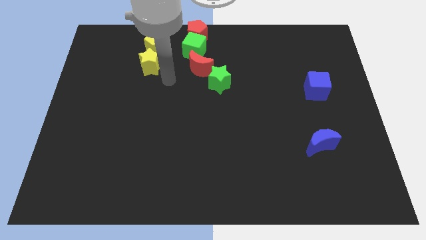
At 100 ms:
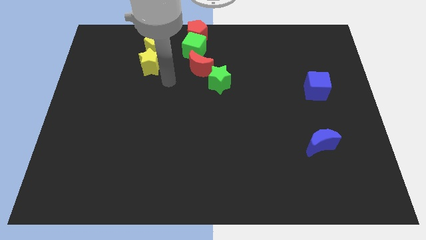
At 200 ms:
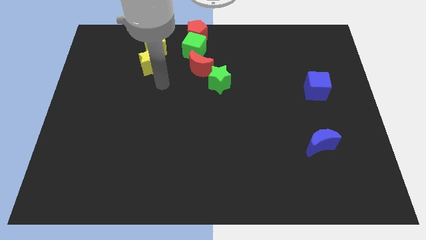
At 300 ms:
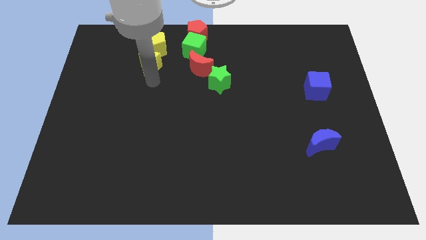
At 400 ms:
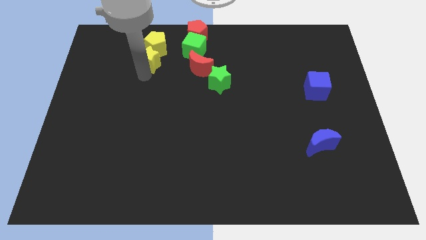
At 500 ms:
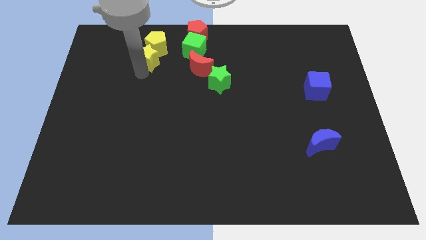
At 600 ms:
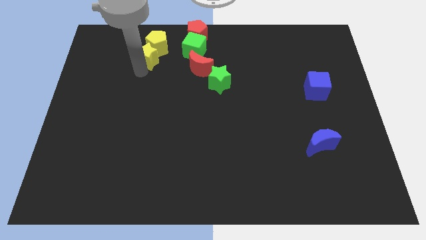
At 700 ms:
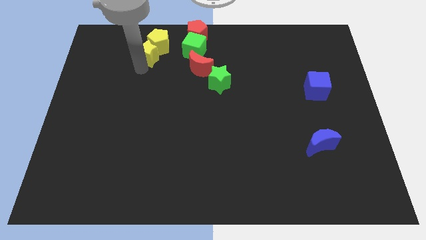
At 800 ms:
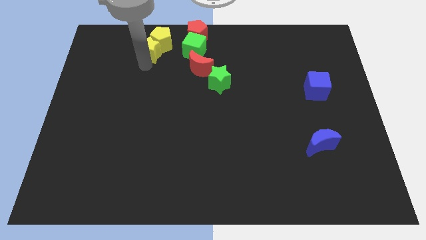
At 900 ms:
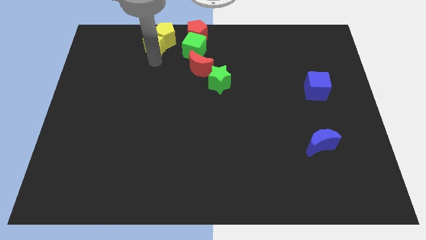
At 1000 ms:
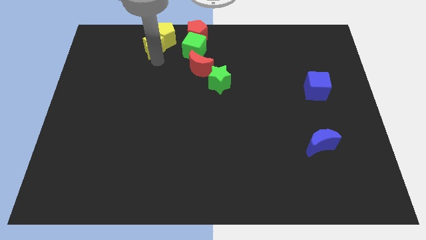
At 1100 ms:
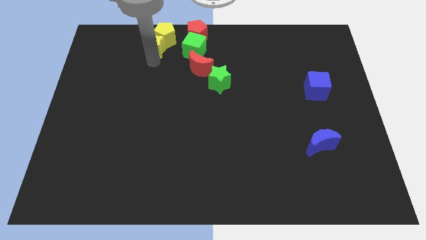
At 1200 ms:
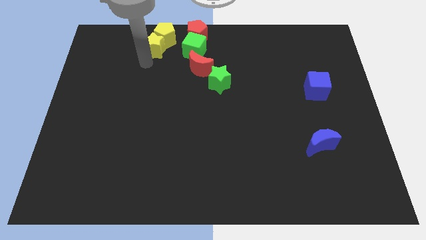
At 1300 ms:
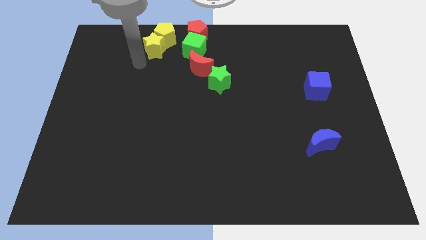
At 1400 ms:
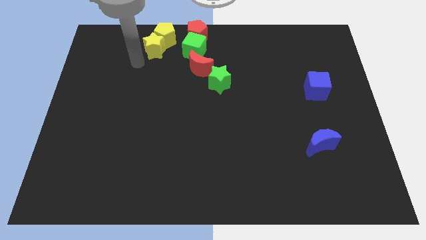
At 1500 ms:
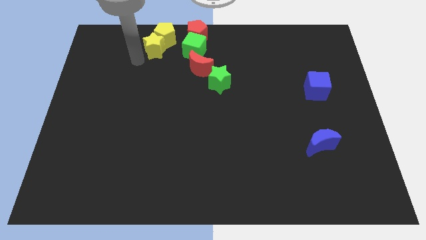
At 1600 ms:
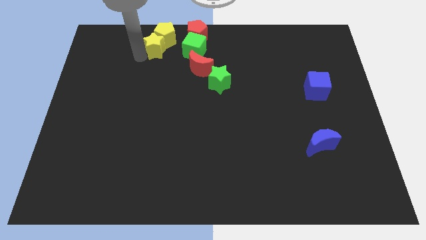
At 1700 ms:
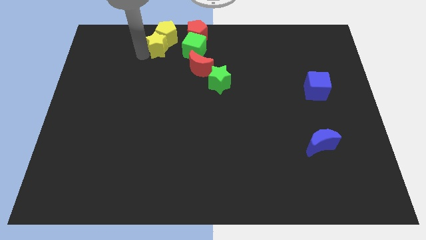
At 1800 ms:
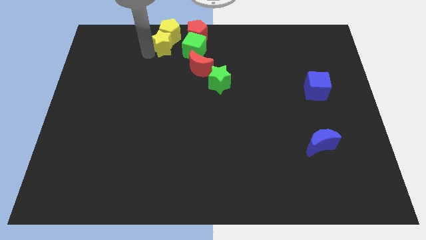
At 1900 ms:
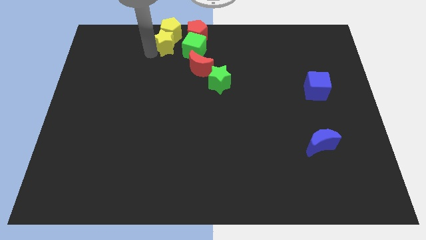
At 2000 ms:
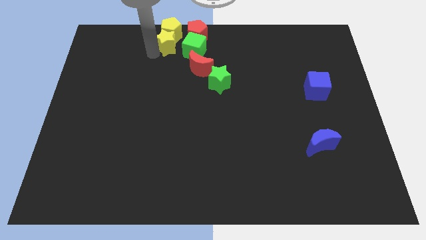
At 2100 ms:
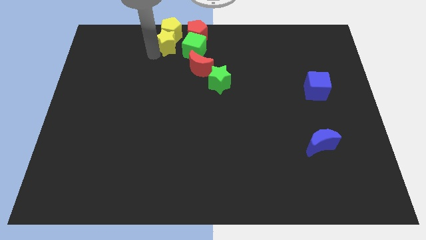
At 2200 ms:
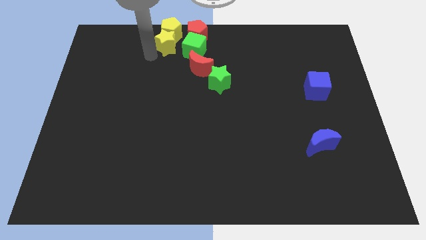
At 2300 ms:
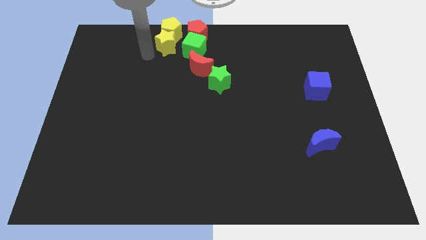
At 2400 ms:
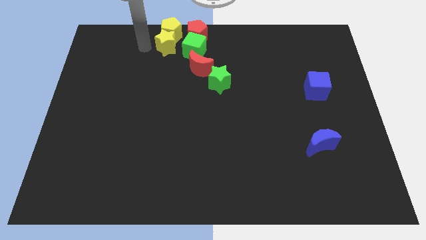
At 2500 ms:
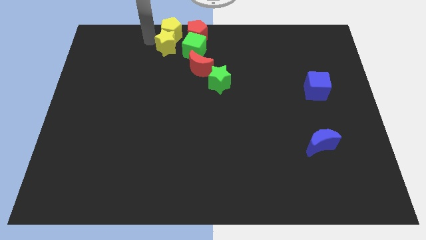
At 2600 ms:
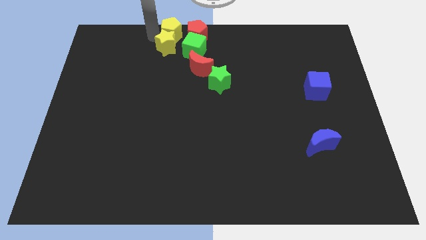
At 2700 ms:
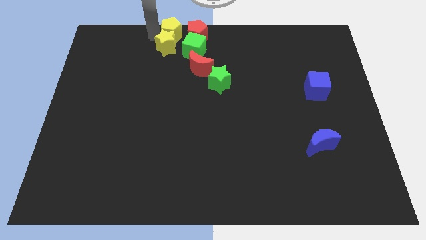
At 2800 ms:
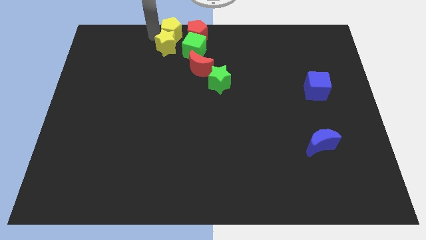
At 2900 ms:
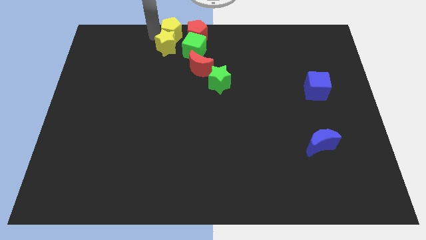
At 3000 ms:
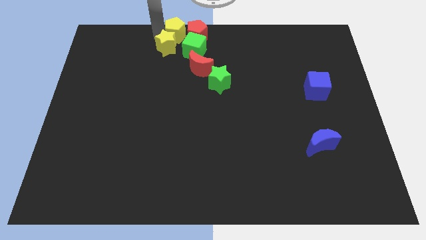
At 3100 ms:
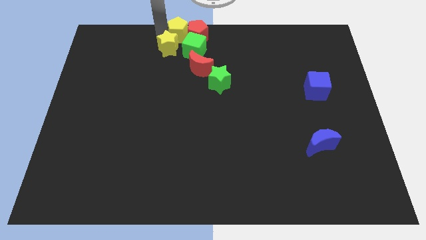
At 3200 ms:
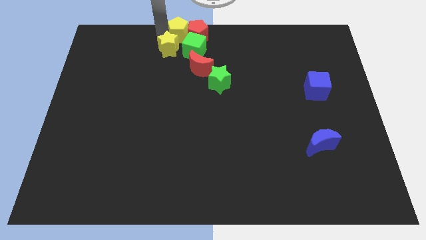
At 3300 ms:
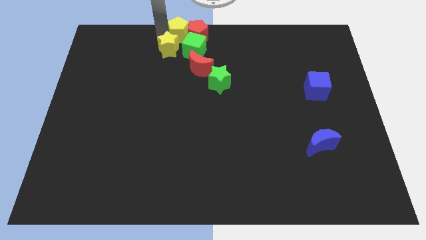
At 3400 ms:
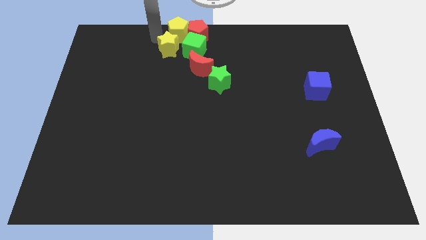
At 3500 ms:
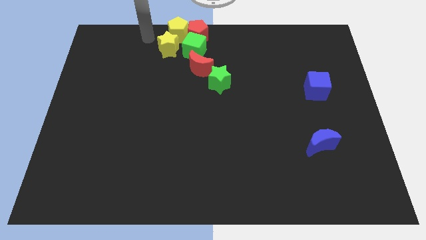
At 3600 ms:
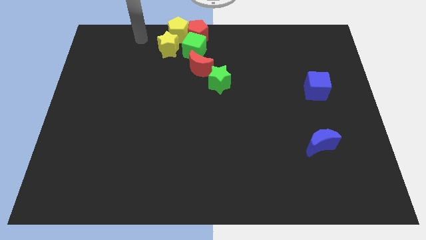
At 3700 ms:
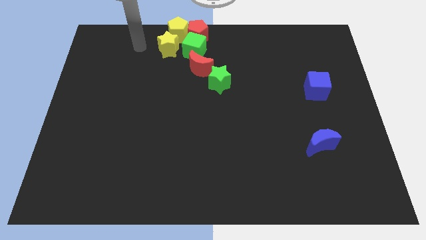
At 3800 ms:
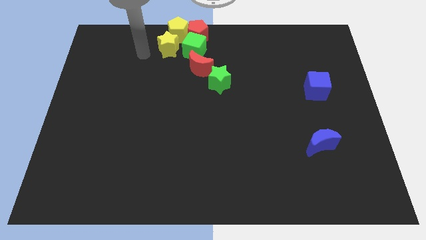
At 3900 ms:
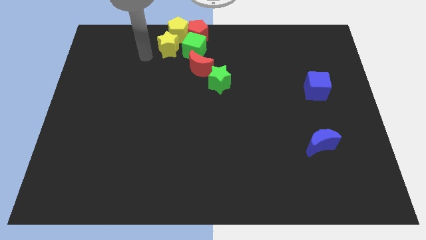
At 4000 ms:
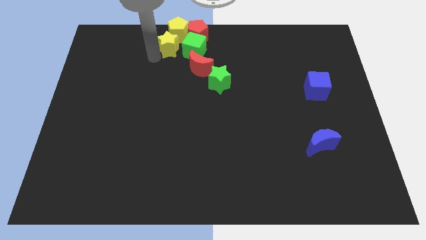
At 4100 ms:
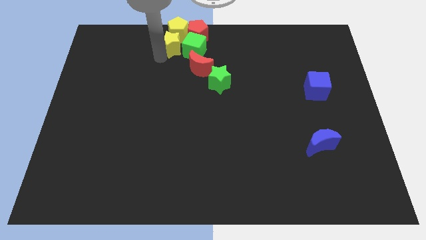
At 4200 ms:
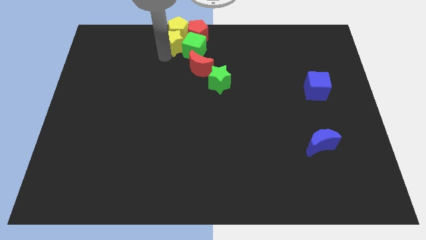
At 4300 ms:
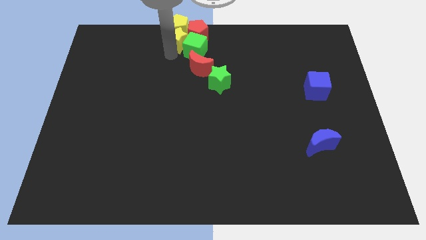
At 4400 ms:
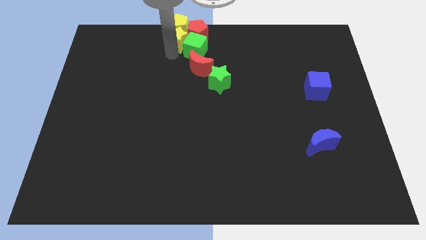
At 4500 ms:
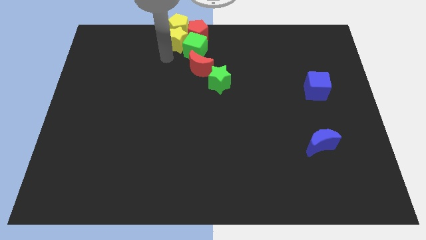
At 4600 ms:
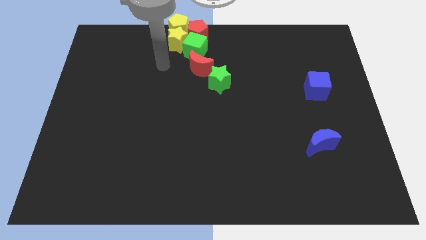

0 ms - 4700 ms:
push the yellow star into the yellow pentagon

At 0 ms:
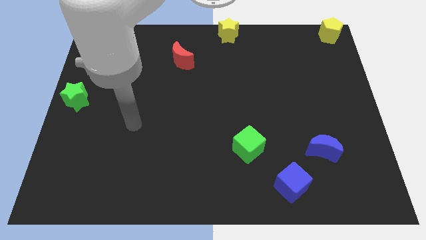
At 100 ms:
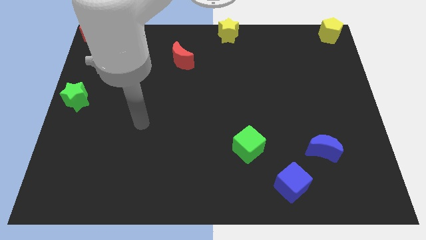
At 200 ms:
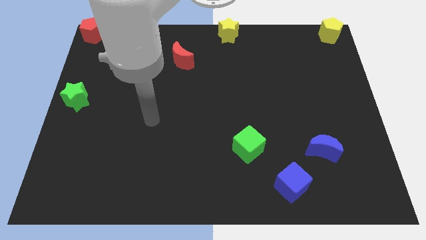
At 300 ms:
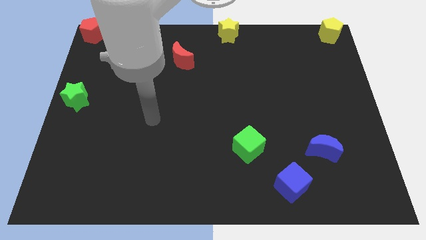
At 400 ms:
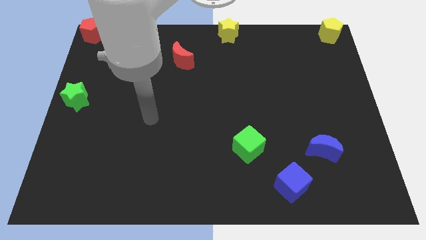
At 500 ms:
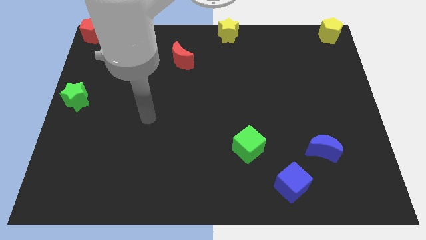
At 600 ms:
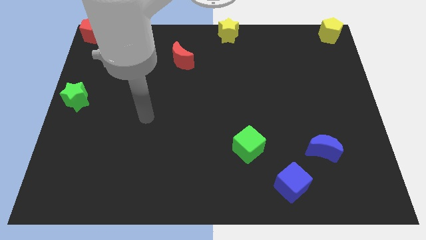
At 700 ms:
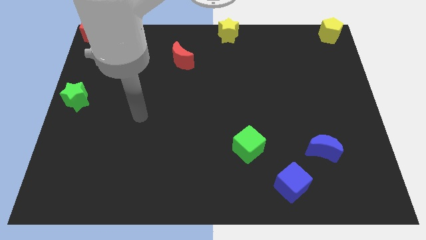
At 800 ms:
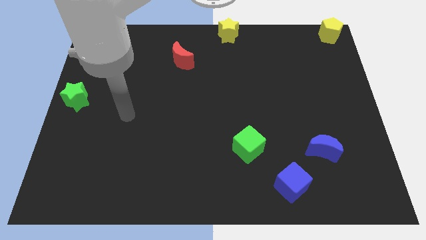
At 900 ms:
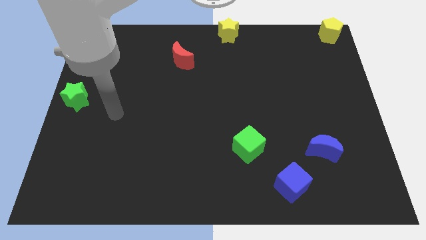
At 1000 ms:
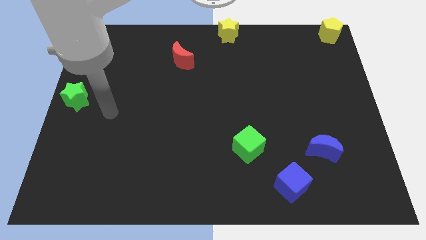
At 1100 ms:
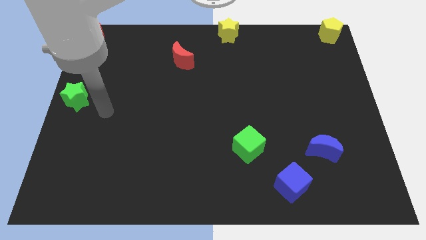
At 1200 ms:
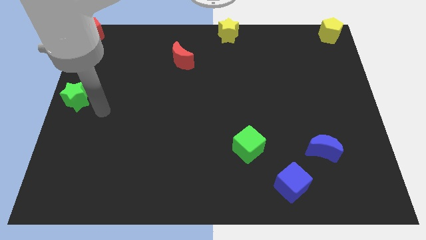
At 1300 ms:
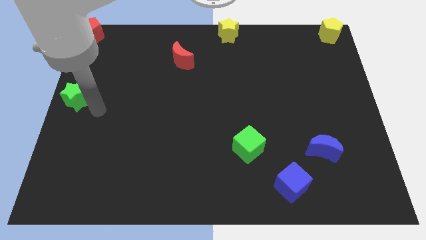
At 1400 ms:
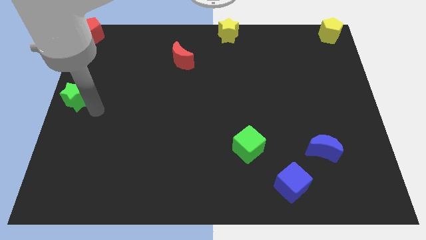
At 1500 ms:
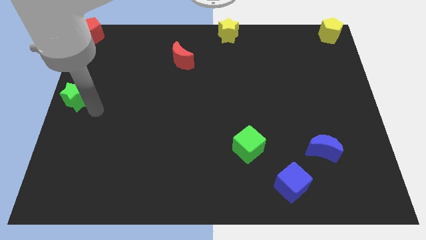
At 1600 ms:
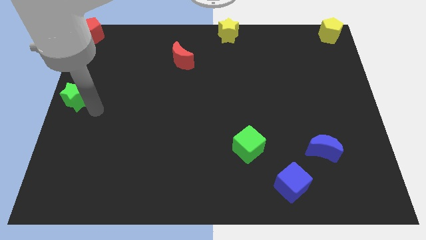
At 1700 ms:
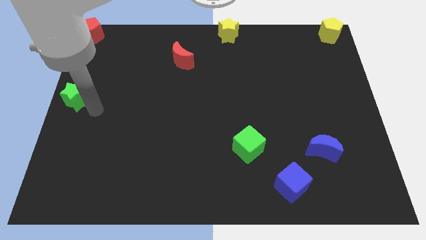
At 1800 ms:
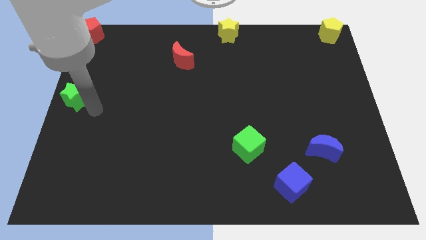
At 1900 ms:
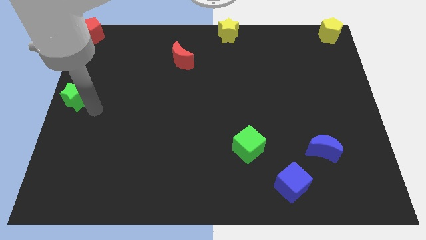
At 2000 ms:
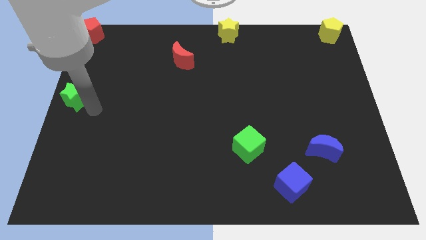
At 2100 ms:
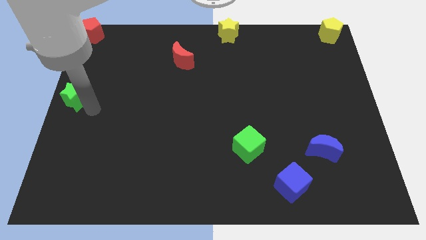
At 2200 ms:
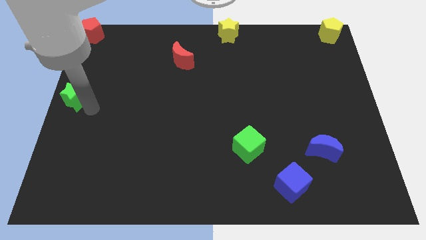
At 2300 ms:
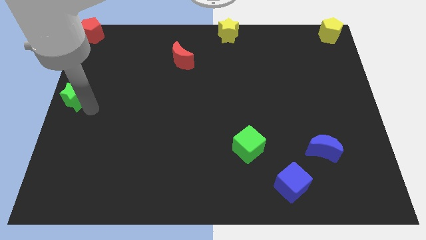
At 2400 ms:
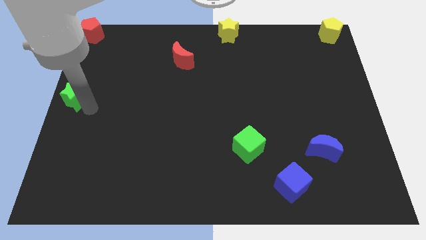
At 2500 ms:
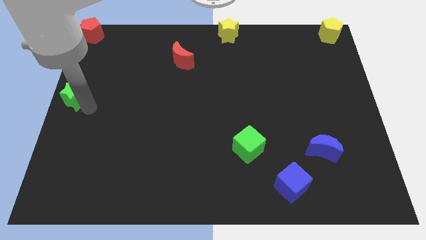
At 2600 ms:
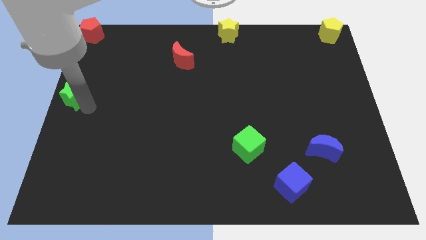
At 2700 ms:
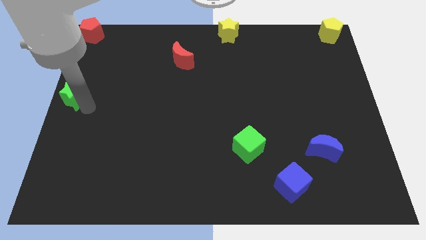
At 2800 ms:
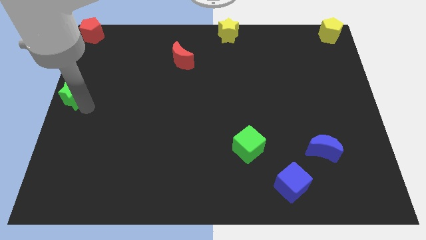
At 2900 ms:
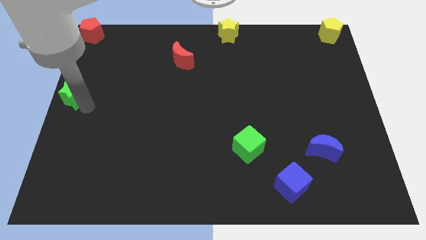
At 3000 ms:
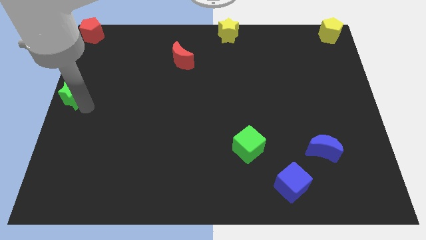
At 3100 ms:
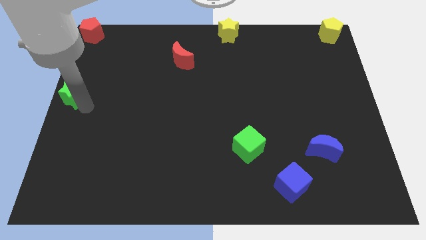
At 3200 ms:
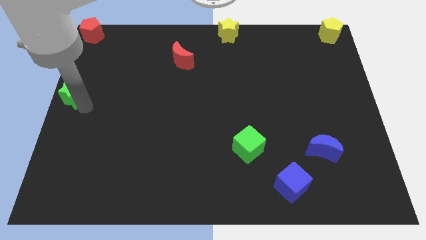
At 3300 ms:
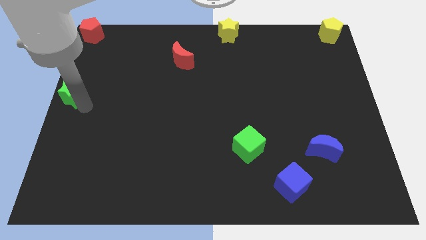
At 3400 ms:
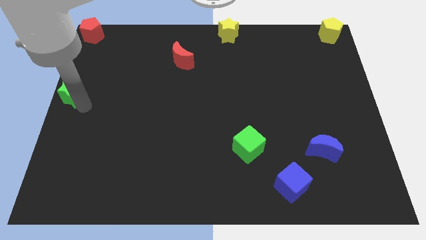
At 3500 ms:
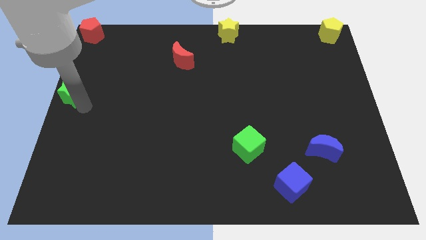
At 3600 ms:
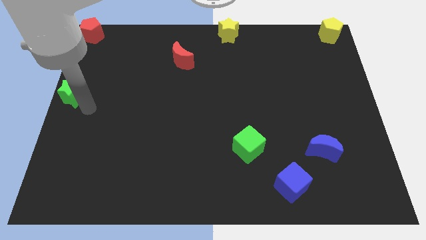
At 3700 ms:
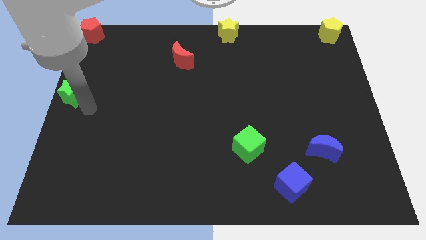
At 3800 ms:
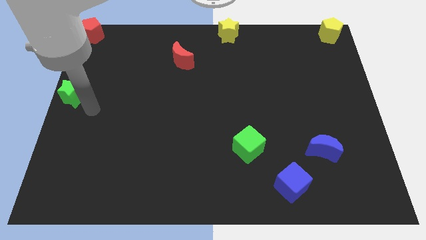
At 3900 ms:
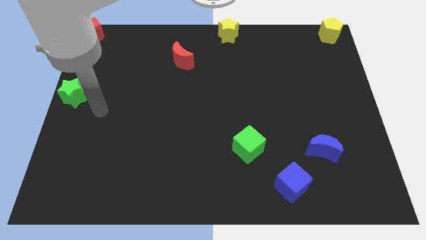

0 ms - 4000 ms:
slide the green star vertically below the red pentagon

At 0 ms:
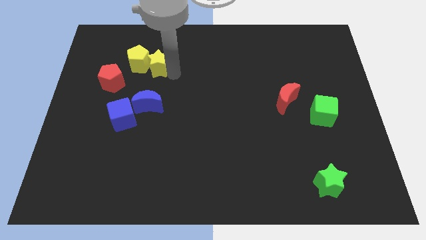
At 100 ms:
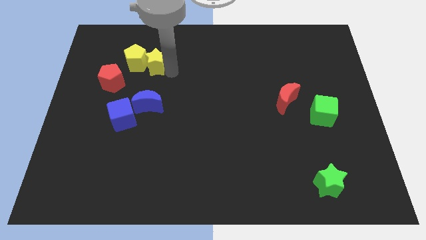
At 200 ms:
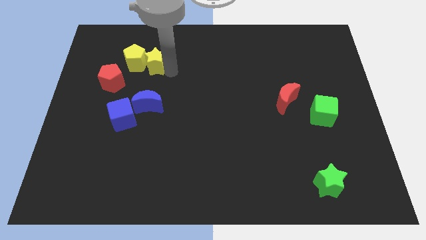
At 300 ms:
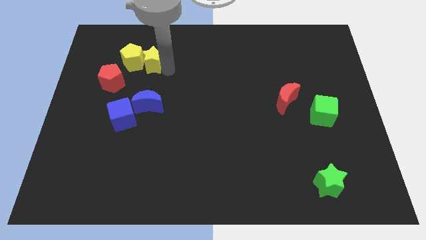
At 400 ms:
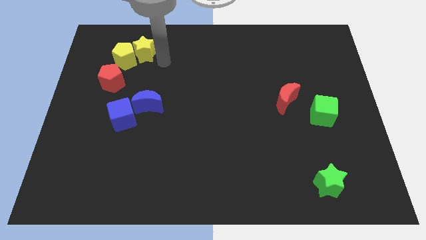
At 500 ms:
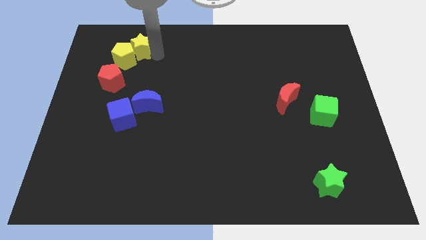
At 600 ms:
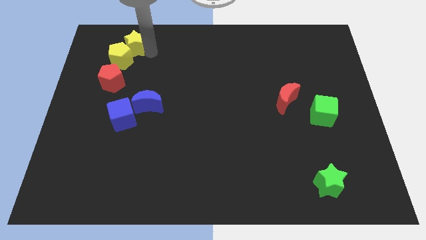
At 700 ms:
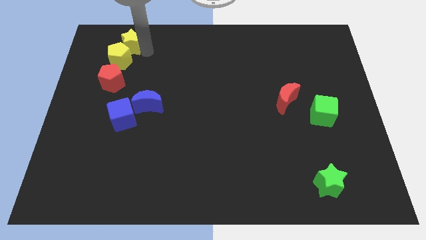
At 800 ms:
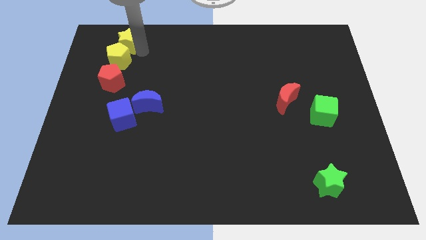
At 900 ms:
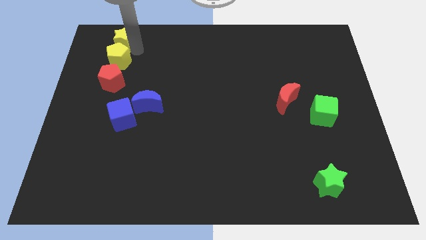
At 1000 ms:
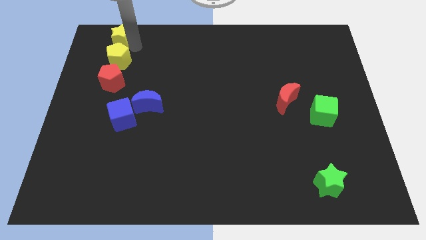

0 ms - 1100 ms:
make a line out of yellow blocks and red pentagon
